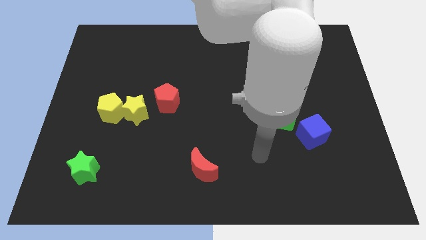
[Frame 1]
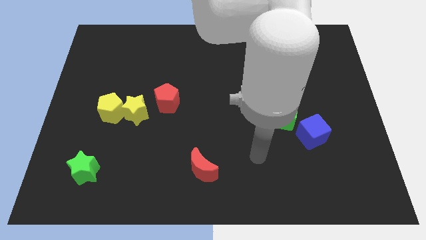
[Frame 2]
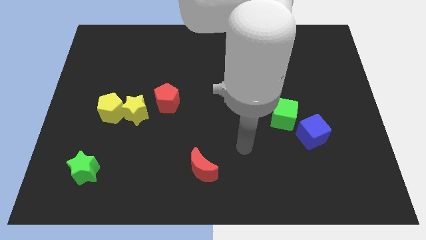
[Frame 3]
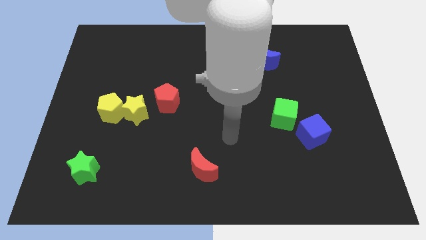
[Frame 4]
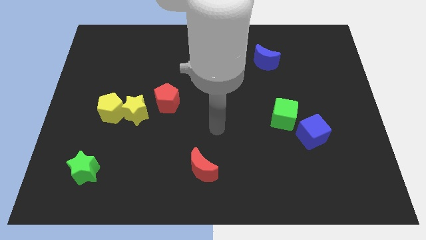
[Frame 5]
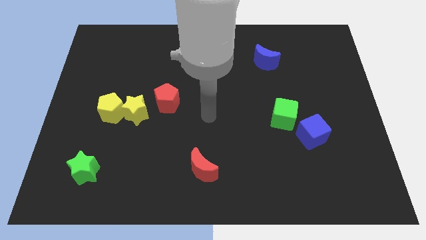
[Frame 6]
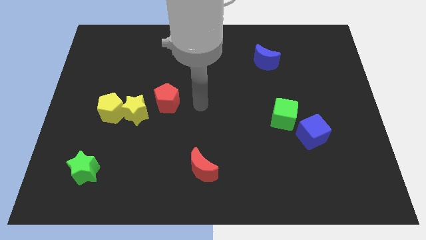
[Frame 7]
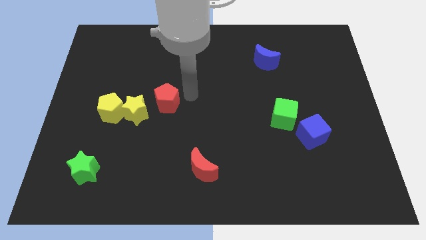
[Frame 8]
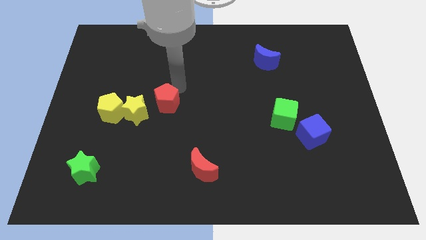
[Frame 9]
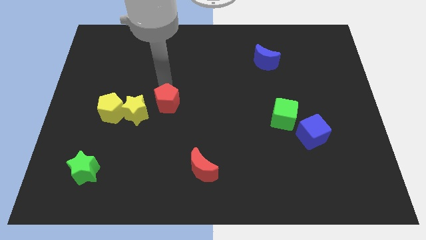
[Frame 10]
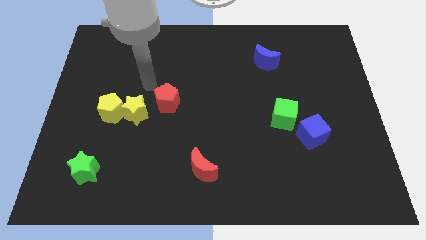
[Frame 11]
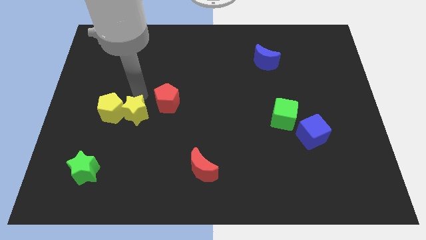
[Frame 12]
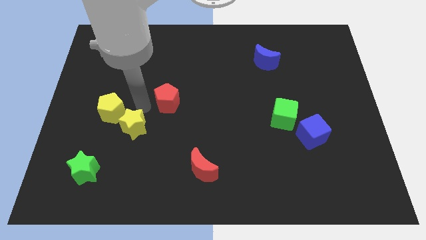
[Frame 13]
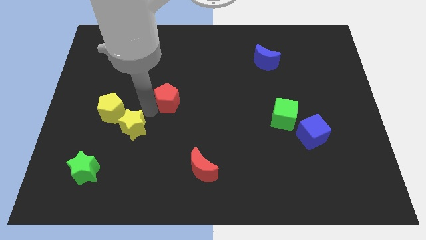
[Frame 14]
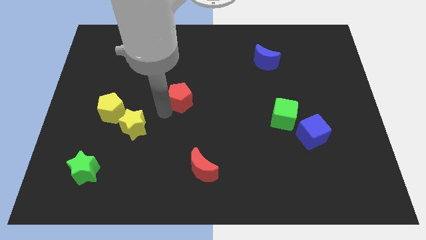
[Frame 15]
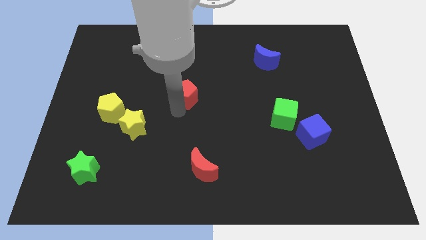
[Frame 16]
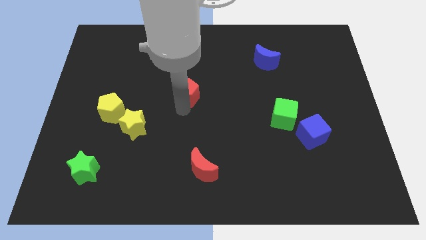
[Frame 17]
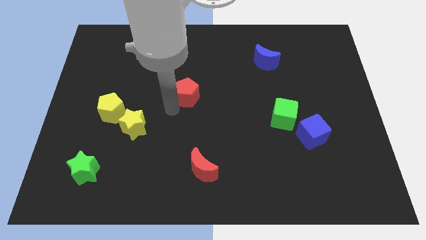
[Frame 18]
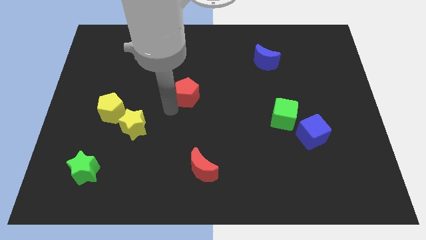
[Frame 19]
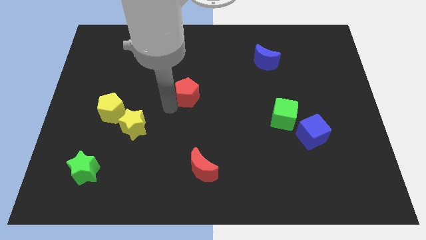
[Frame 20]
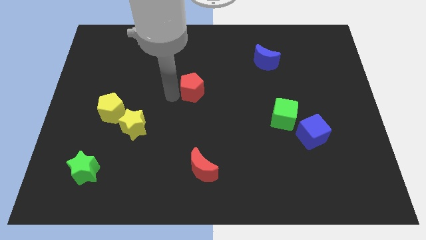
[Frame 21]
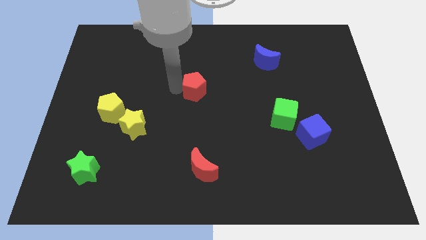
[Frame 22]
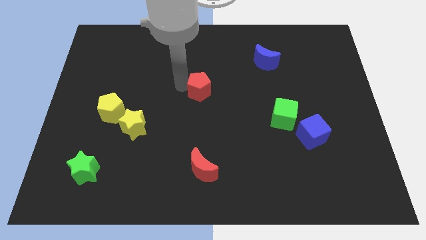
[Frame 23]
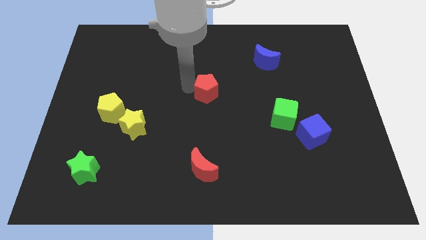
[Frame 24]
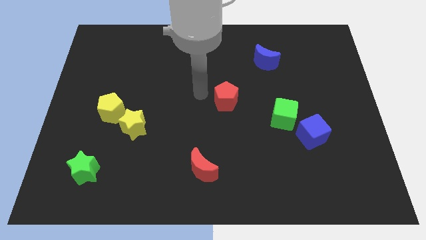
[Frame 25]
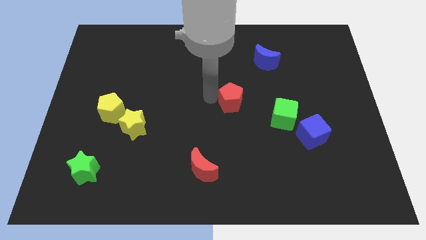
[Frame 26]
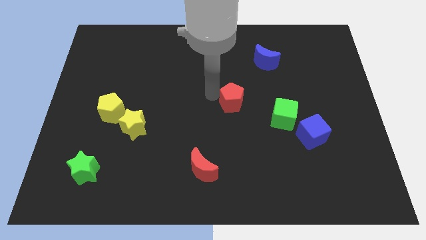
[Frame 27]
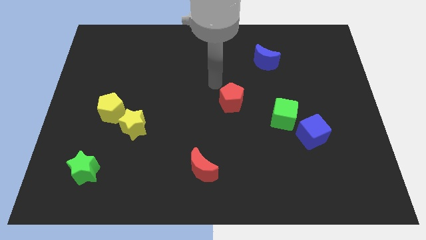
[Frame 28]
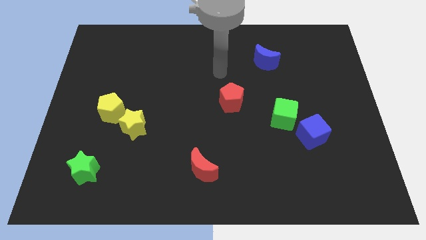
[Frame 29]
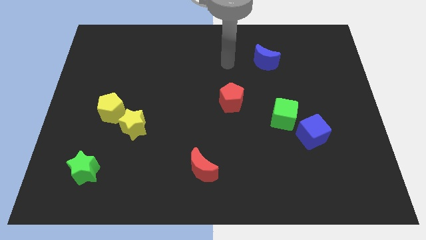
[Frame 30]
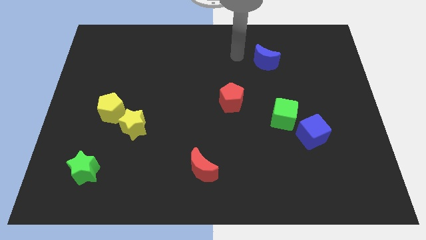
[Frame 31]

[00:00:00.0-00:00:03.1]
push the red pentagon close to the green cube

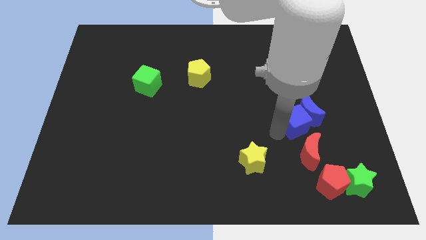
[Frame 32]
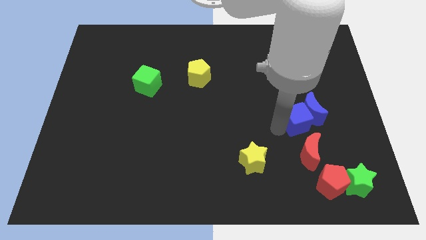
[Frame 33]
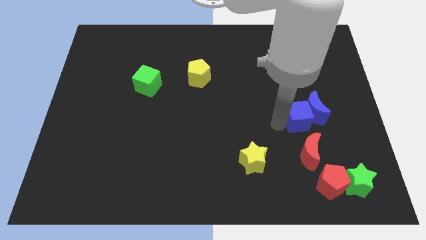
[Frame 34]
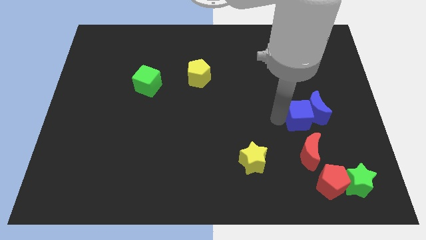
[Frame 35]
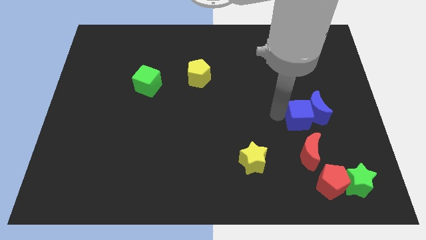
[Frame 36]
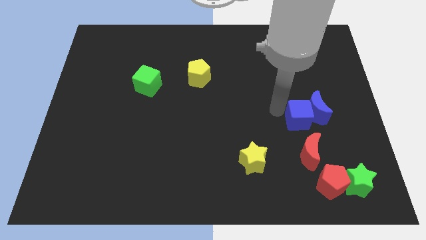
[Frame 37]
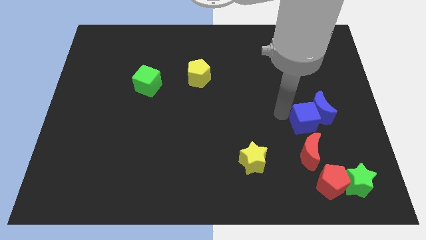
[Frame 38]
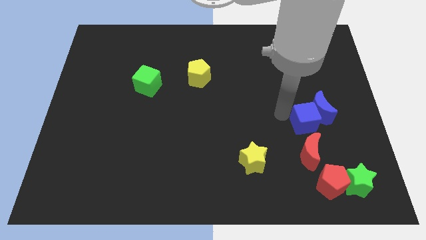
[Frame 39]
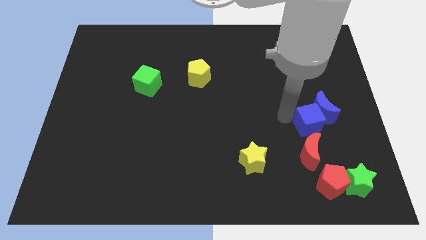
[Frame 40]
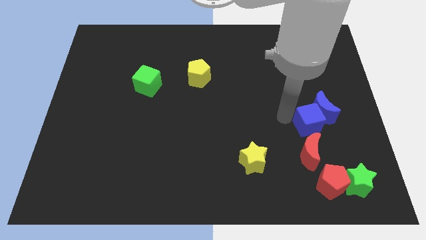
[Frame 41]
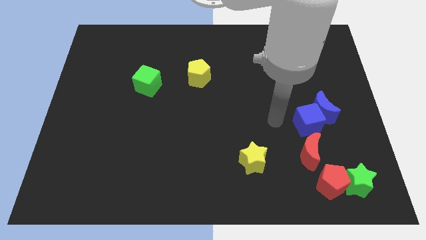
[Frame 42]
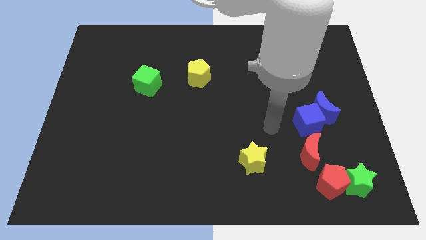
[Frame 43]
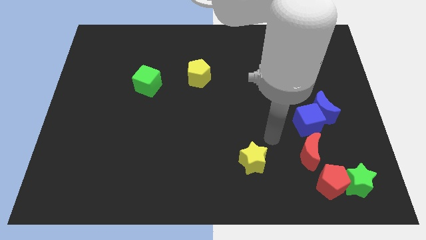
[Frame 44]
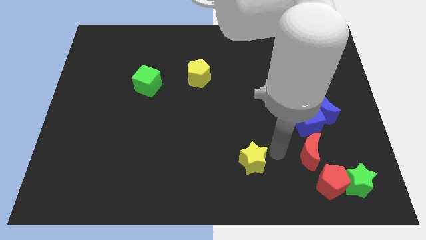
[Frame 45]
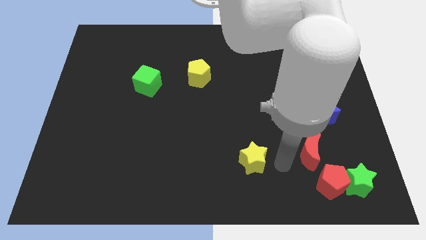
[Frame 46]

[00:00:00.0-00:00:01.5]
push the blue crescent with blue cube towards the right side of the board

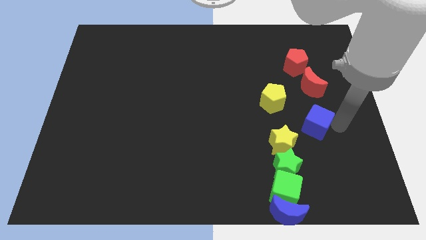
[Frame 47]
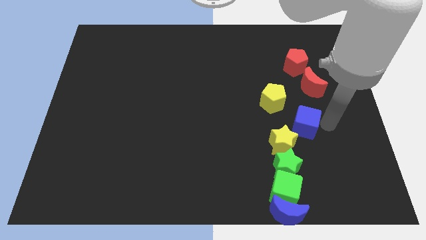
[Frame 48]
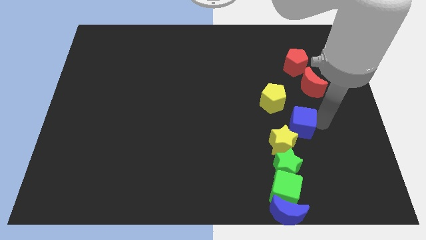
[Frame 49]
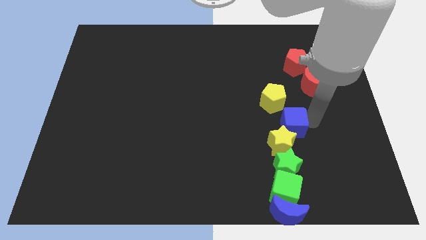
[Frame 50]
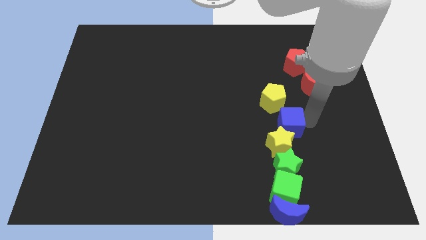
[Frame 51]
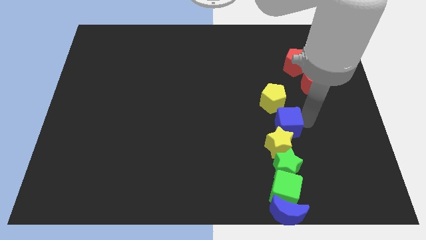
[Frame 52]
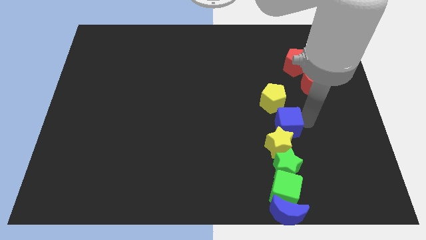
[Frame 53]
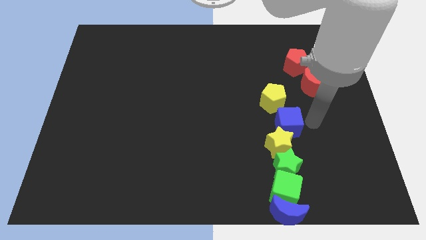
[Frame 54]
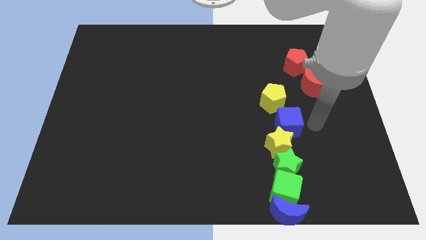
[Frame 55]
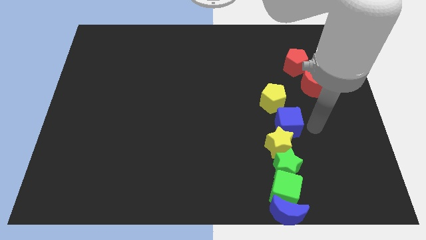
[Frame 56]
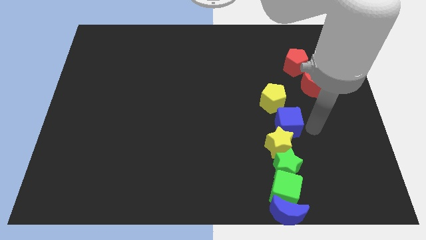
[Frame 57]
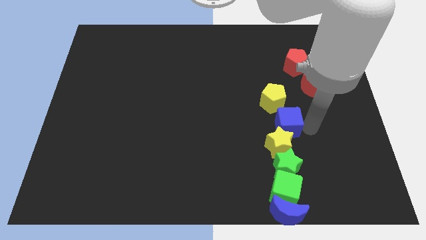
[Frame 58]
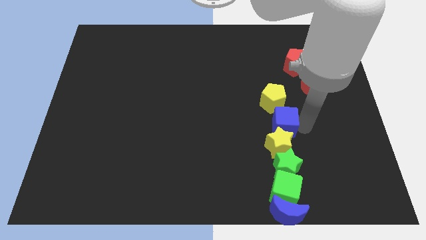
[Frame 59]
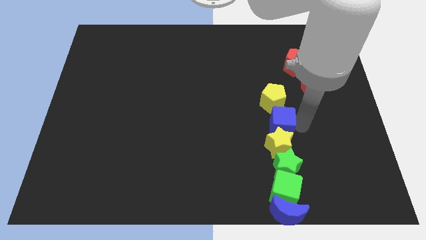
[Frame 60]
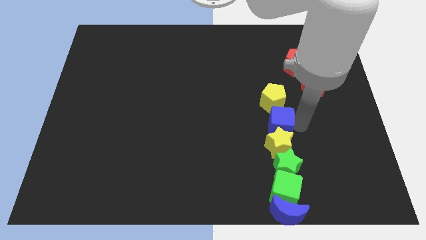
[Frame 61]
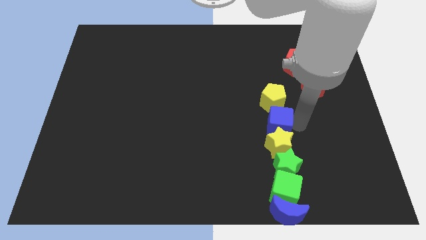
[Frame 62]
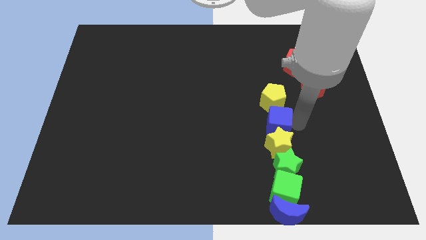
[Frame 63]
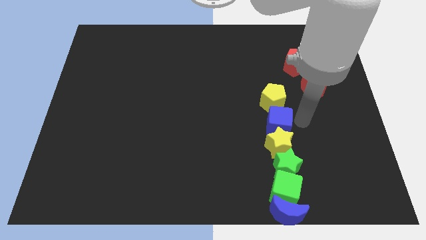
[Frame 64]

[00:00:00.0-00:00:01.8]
put the blue cube at the top of the yellow star

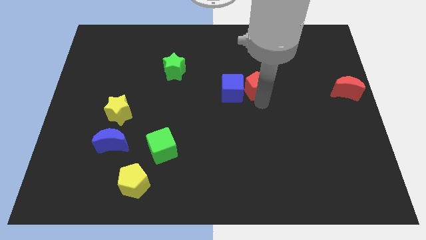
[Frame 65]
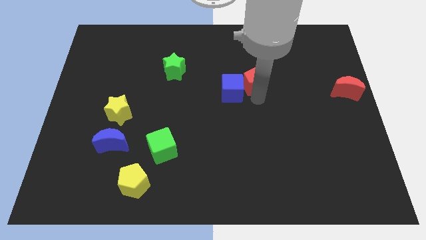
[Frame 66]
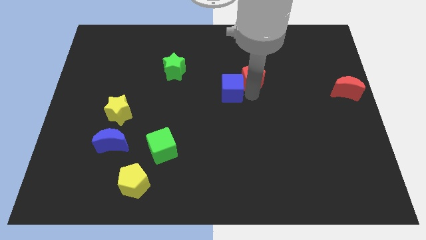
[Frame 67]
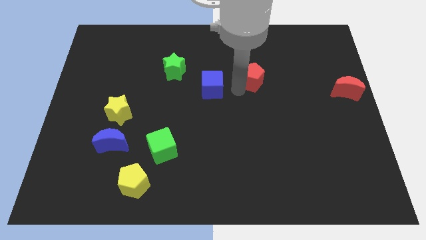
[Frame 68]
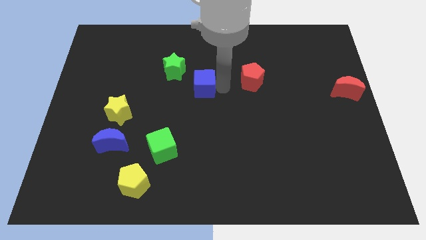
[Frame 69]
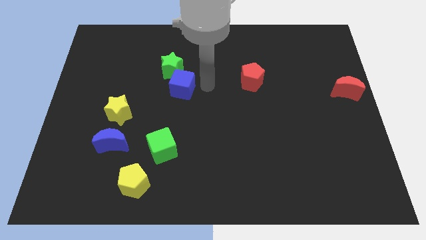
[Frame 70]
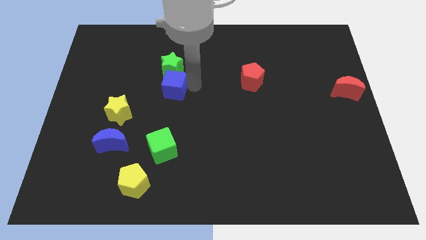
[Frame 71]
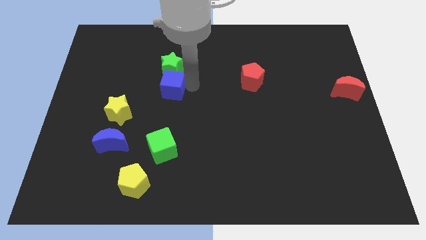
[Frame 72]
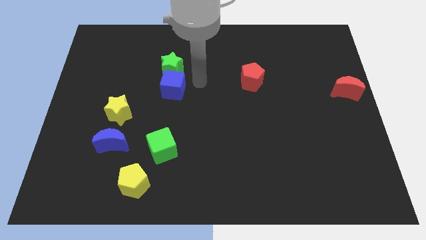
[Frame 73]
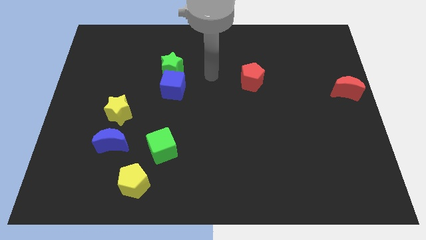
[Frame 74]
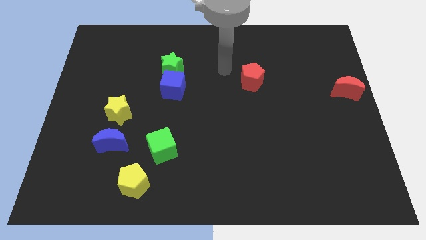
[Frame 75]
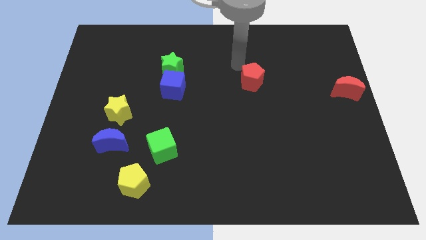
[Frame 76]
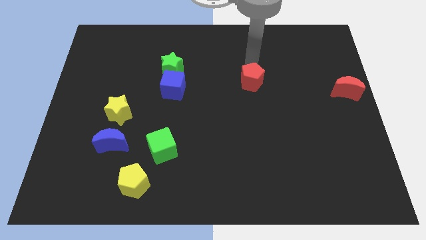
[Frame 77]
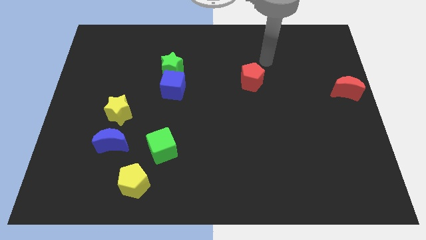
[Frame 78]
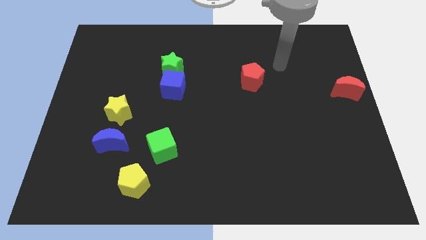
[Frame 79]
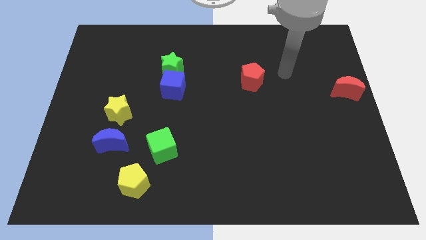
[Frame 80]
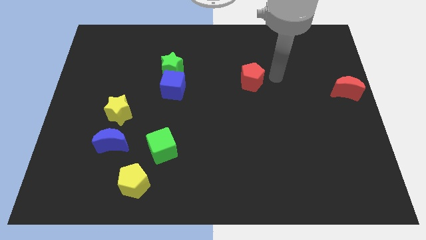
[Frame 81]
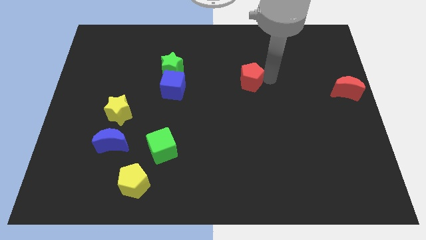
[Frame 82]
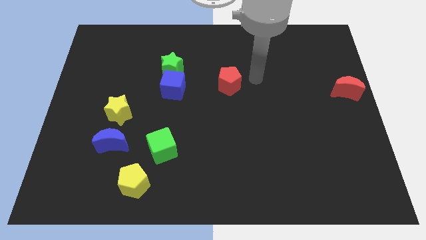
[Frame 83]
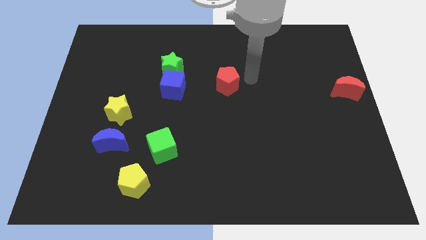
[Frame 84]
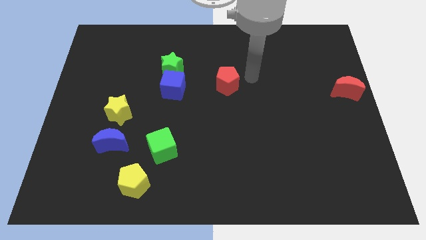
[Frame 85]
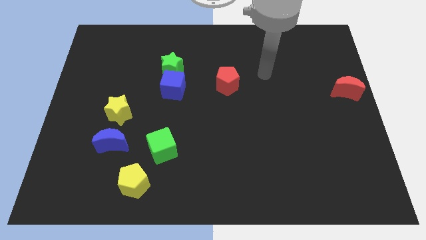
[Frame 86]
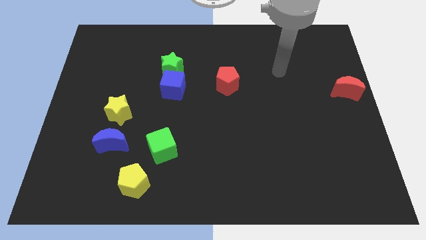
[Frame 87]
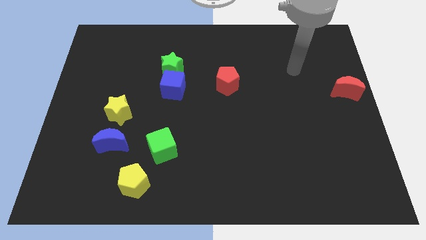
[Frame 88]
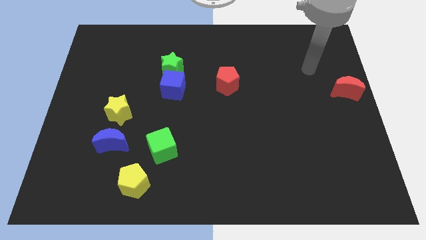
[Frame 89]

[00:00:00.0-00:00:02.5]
slide the blue cube to the bottom of the green star
